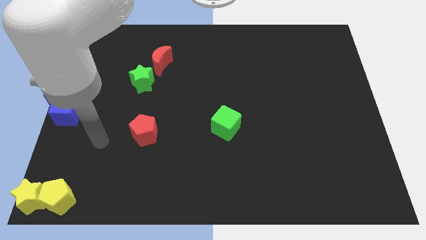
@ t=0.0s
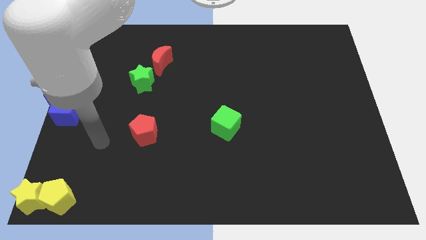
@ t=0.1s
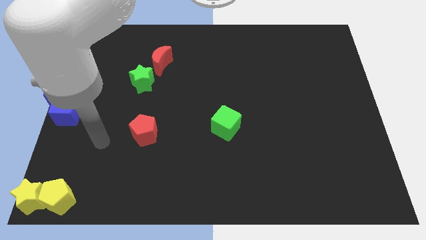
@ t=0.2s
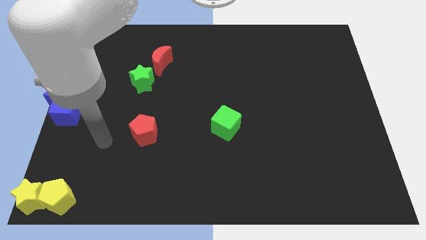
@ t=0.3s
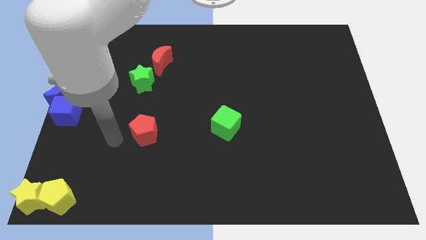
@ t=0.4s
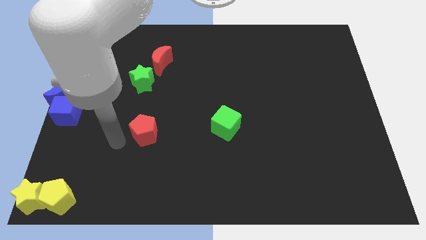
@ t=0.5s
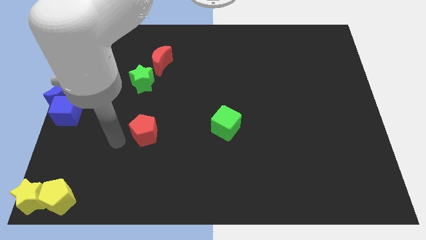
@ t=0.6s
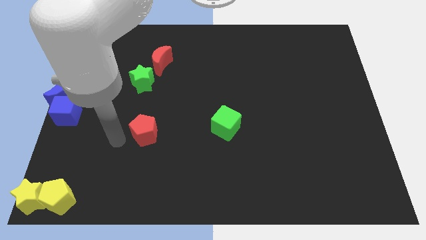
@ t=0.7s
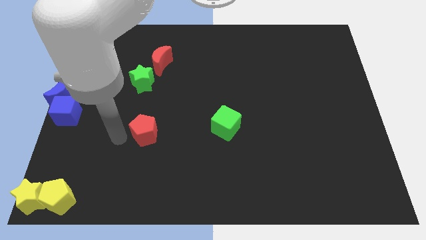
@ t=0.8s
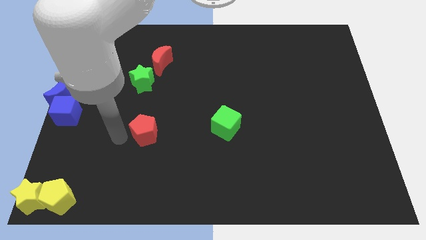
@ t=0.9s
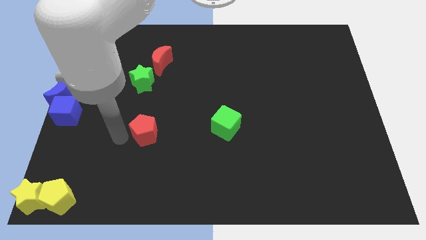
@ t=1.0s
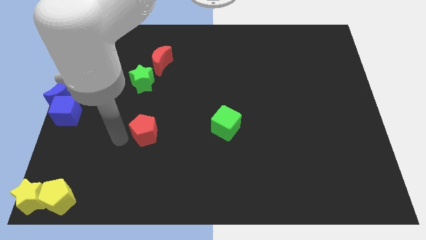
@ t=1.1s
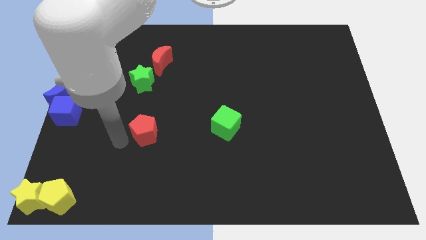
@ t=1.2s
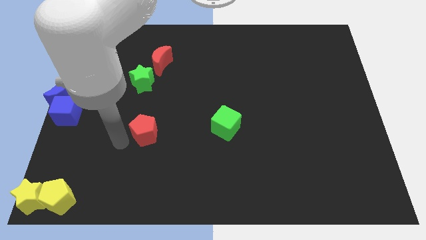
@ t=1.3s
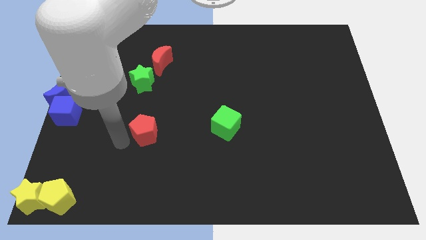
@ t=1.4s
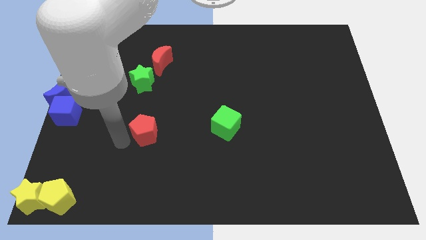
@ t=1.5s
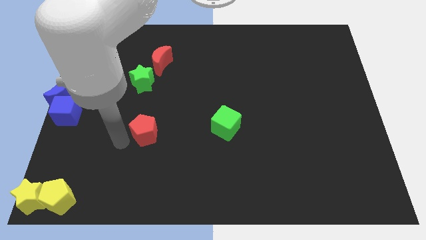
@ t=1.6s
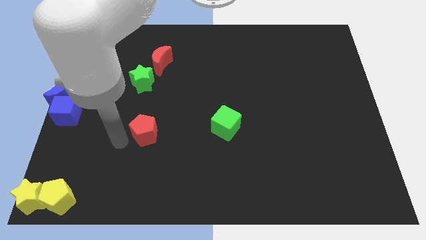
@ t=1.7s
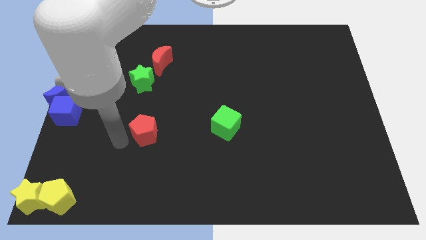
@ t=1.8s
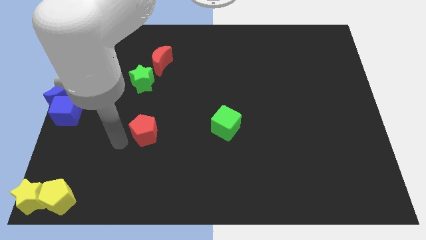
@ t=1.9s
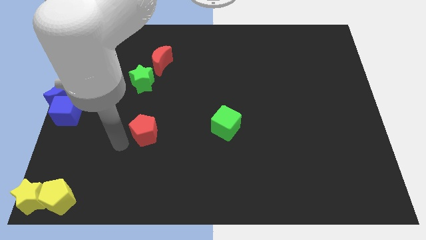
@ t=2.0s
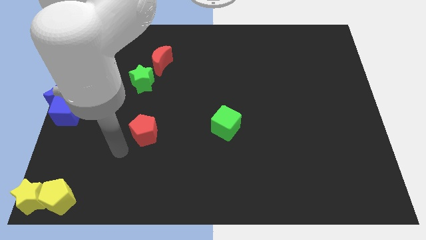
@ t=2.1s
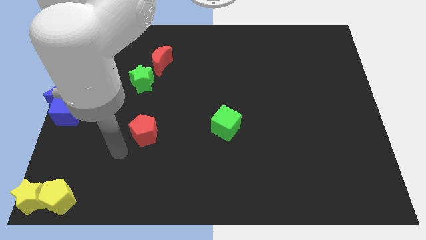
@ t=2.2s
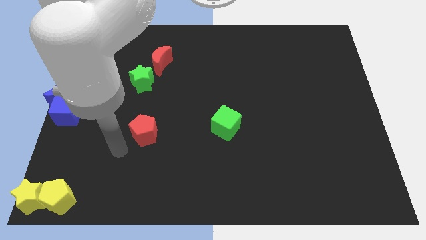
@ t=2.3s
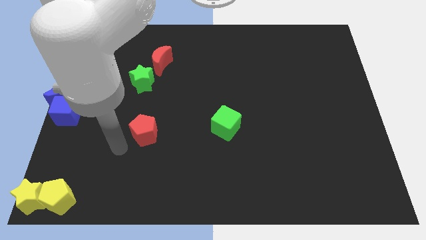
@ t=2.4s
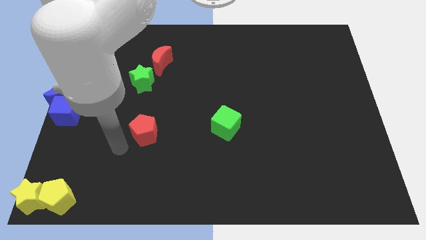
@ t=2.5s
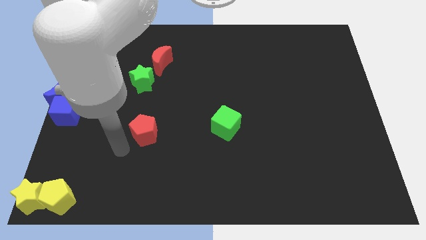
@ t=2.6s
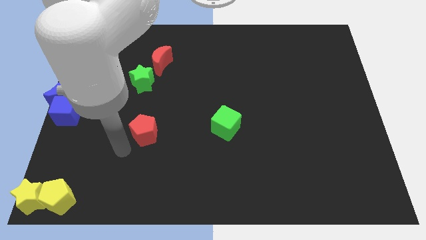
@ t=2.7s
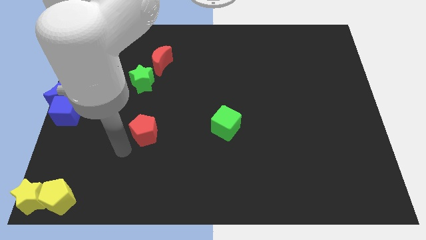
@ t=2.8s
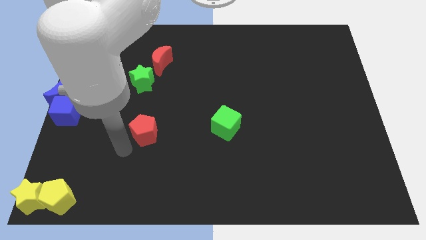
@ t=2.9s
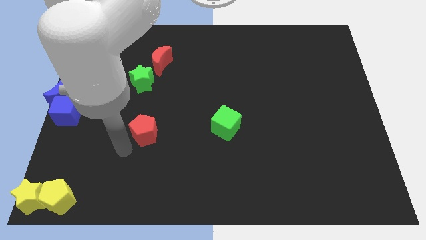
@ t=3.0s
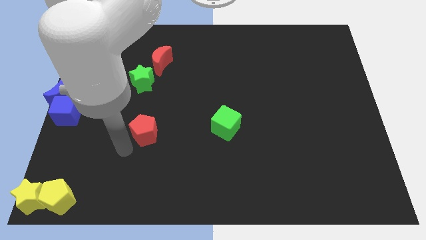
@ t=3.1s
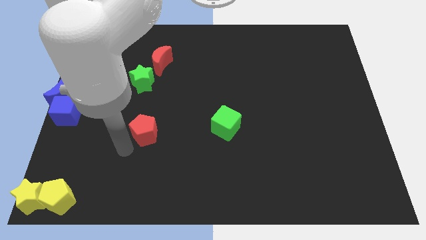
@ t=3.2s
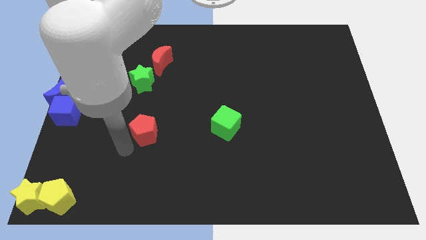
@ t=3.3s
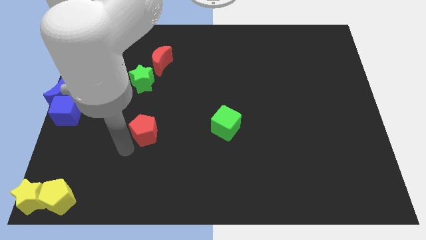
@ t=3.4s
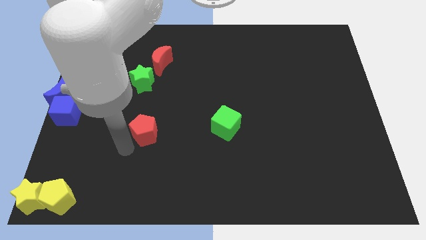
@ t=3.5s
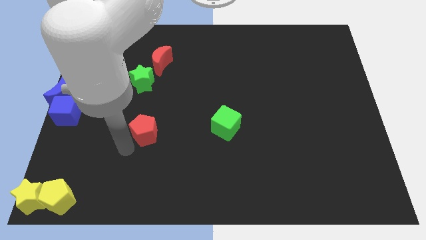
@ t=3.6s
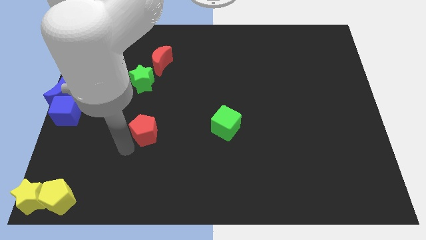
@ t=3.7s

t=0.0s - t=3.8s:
move your arm close to the red pentagon

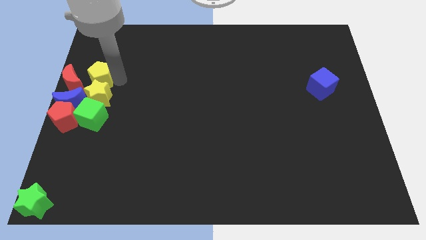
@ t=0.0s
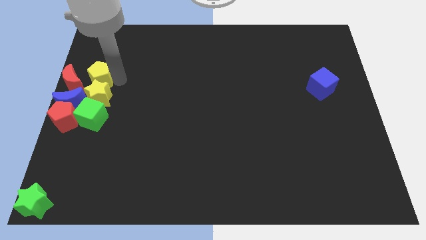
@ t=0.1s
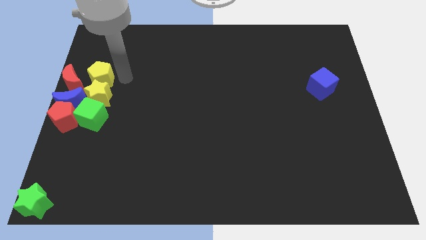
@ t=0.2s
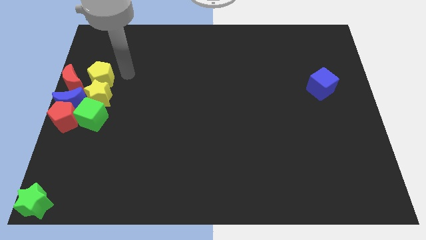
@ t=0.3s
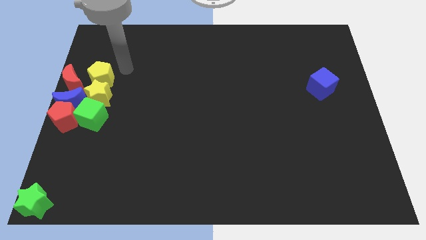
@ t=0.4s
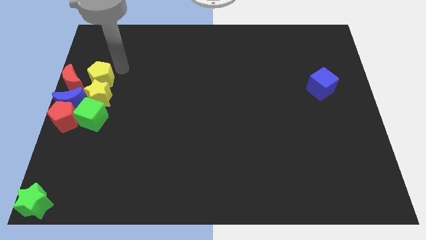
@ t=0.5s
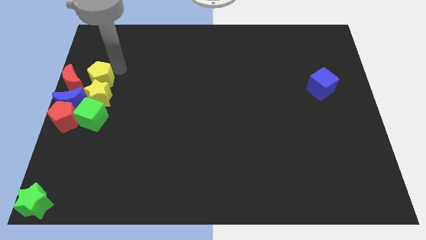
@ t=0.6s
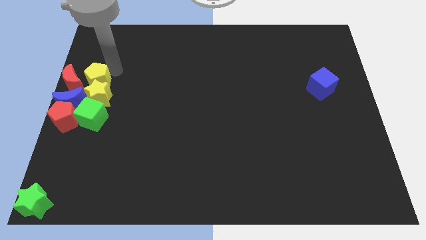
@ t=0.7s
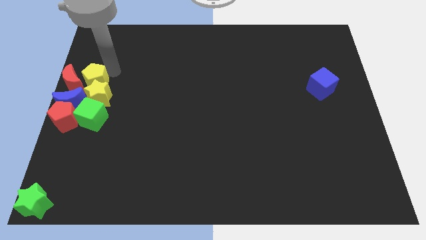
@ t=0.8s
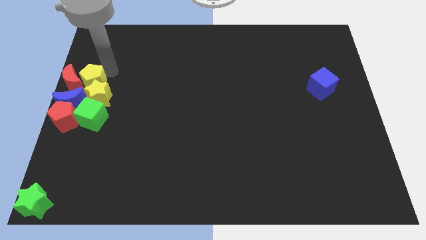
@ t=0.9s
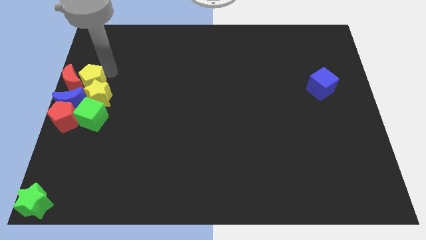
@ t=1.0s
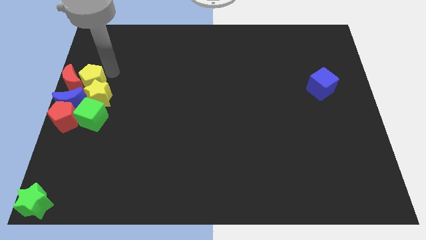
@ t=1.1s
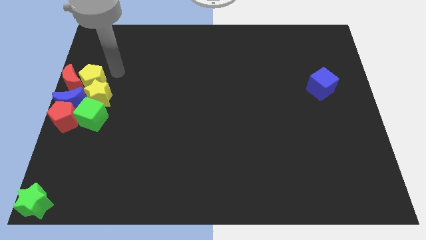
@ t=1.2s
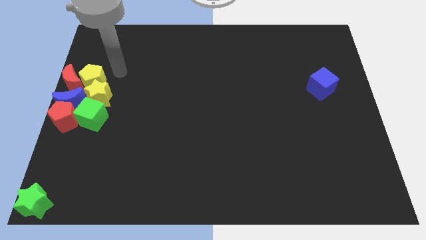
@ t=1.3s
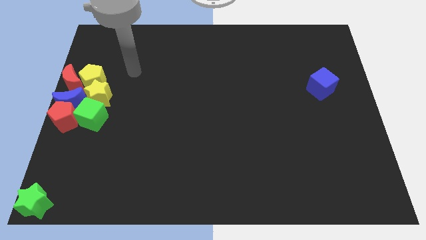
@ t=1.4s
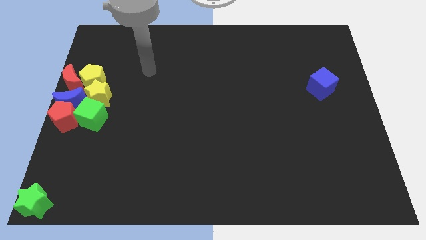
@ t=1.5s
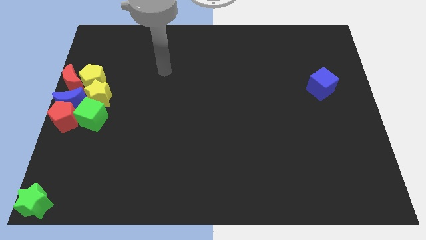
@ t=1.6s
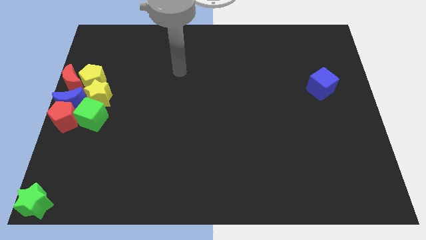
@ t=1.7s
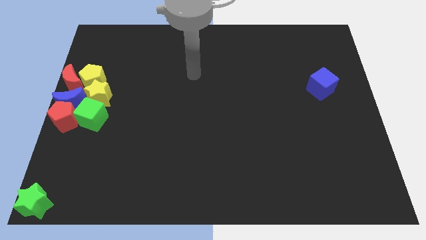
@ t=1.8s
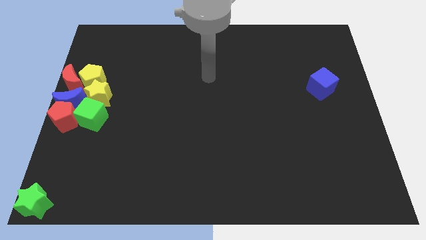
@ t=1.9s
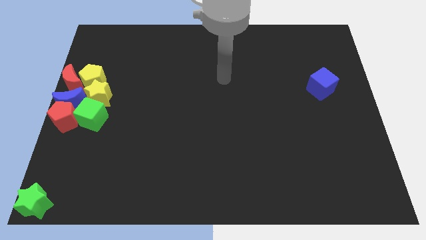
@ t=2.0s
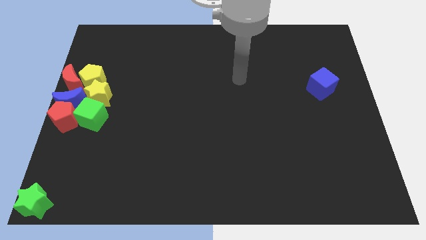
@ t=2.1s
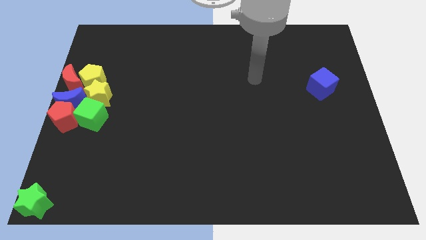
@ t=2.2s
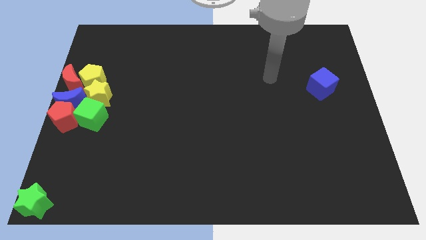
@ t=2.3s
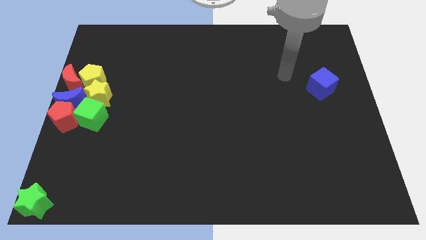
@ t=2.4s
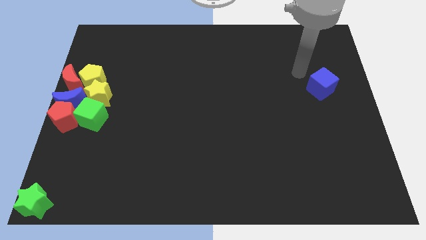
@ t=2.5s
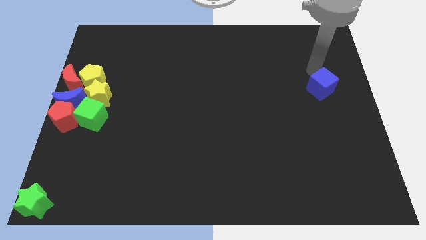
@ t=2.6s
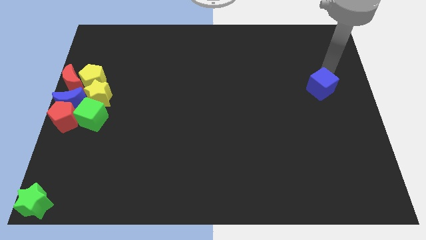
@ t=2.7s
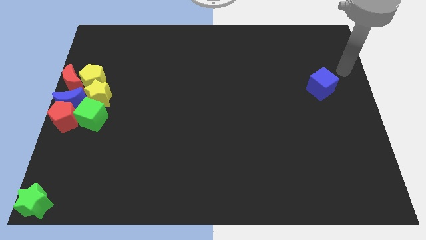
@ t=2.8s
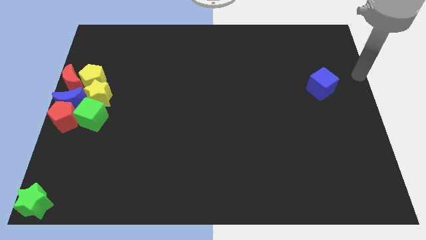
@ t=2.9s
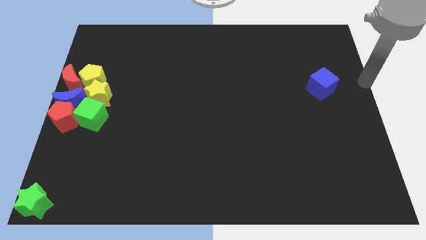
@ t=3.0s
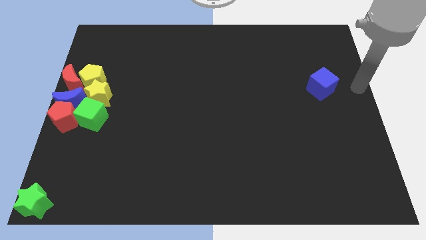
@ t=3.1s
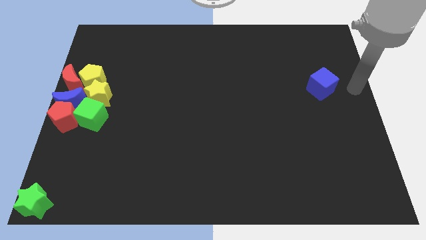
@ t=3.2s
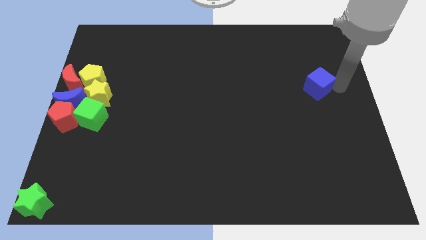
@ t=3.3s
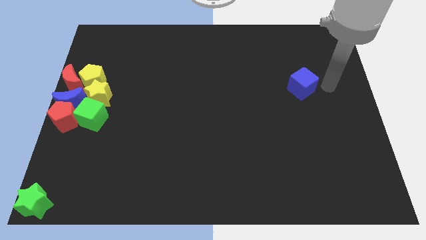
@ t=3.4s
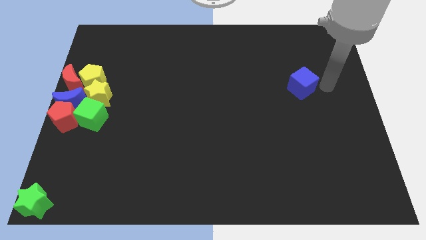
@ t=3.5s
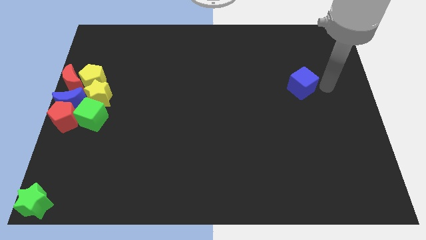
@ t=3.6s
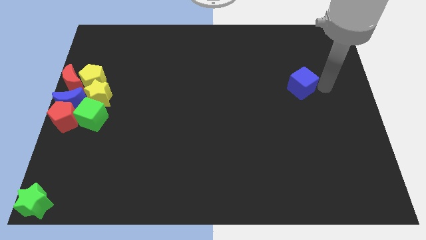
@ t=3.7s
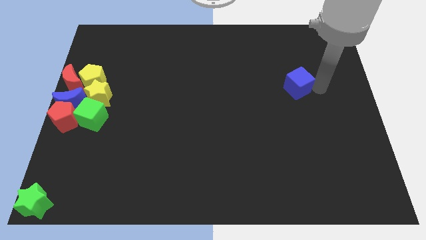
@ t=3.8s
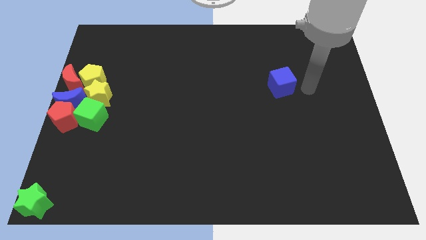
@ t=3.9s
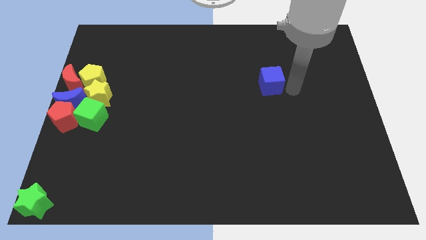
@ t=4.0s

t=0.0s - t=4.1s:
move the blue cube towards the left

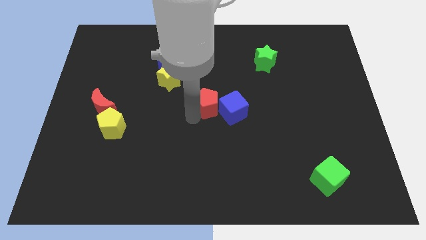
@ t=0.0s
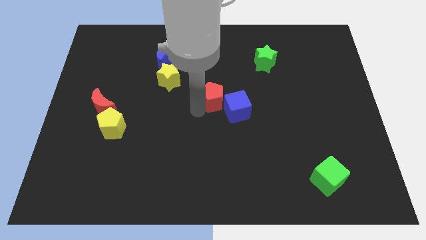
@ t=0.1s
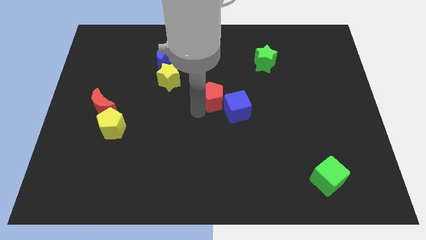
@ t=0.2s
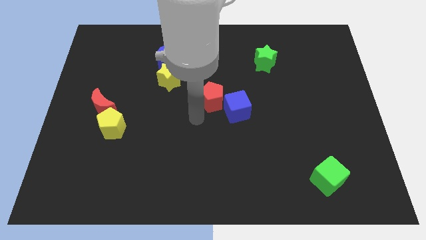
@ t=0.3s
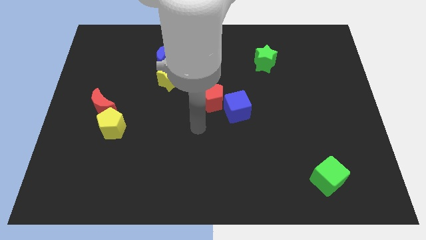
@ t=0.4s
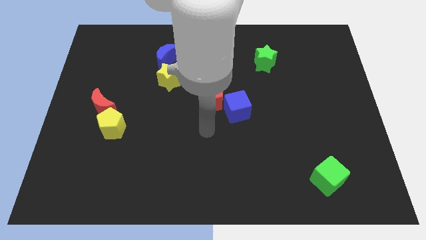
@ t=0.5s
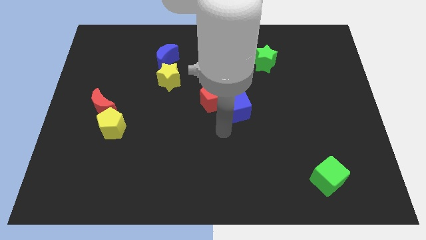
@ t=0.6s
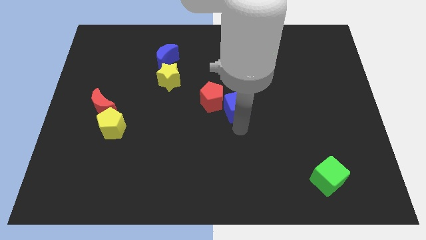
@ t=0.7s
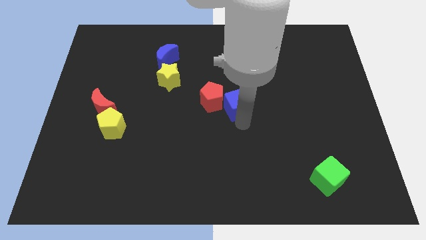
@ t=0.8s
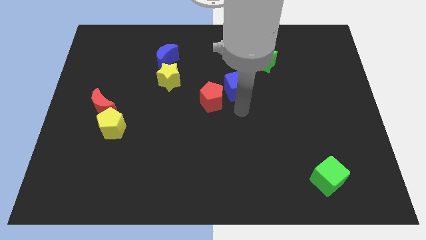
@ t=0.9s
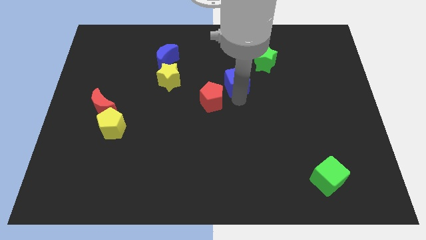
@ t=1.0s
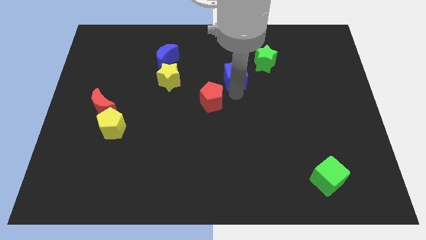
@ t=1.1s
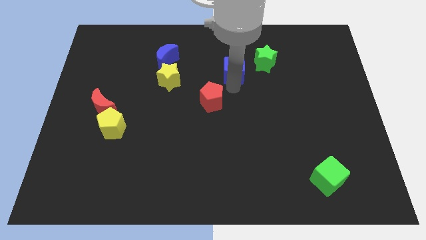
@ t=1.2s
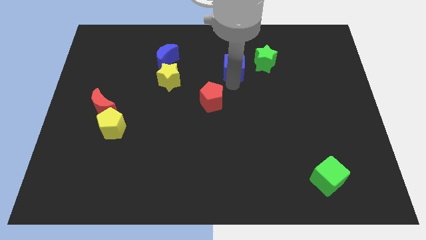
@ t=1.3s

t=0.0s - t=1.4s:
separate the blue cube away from the red pentagon
